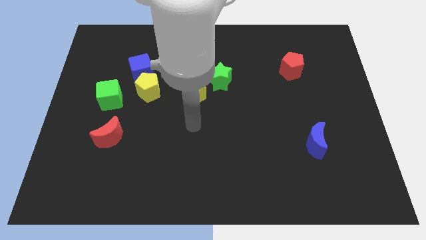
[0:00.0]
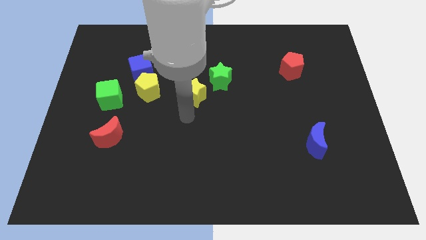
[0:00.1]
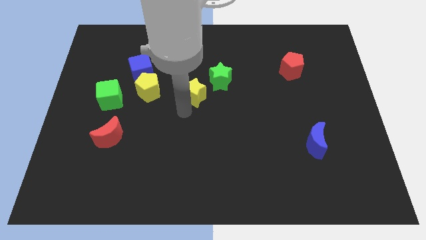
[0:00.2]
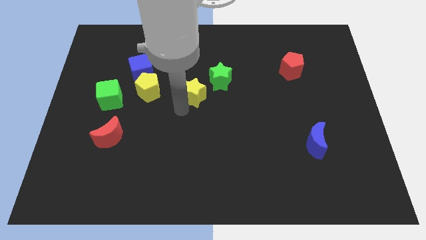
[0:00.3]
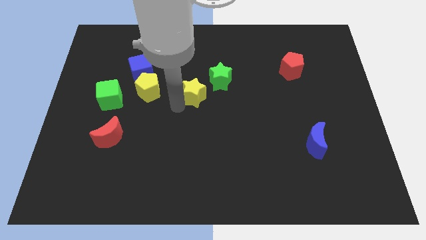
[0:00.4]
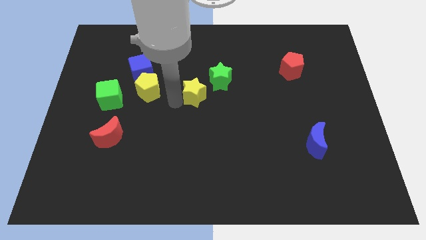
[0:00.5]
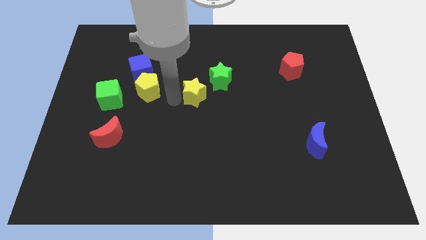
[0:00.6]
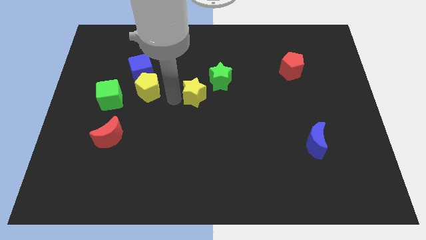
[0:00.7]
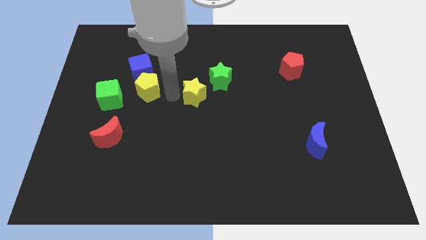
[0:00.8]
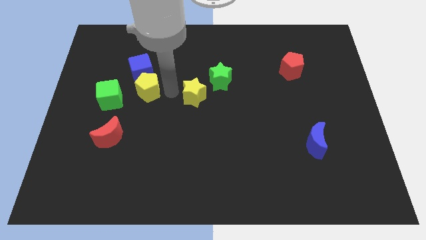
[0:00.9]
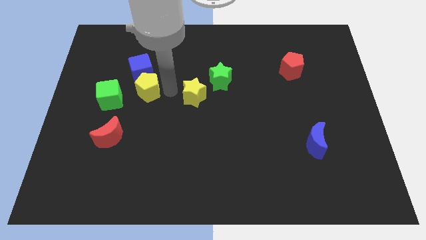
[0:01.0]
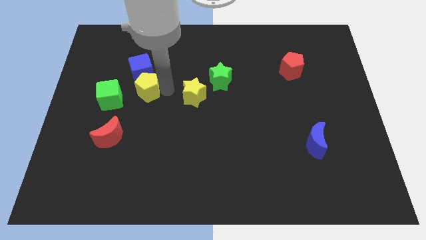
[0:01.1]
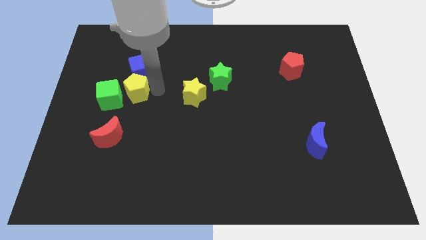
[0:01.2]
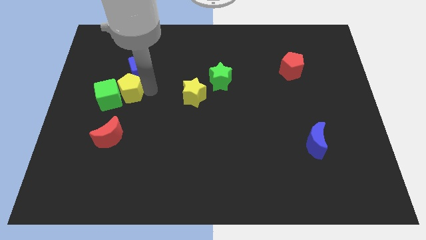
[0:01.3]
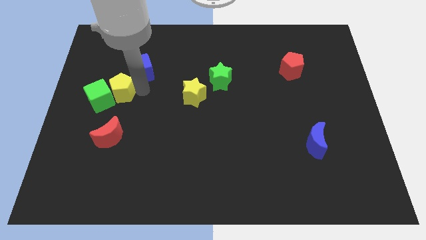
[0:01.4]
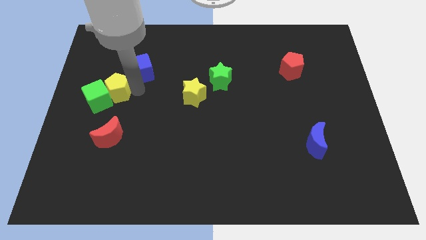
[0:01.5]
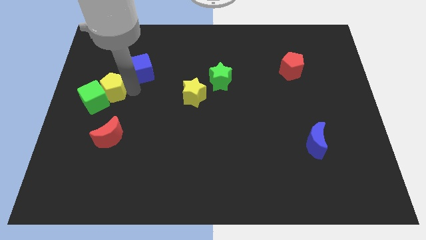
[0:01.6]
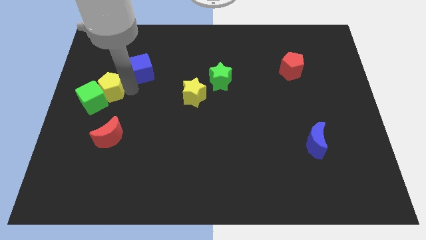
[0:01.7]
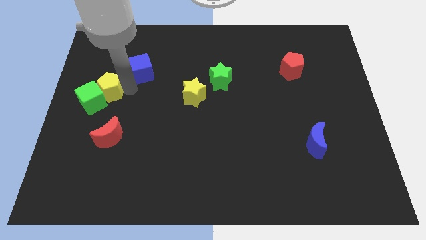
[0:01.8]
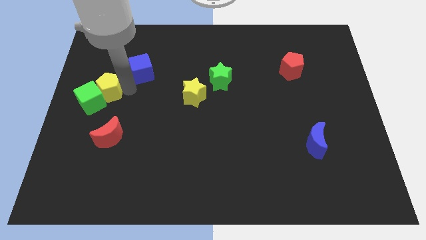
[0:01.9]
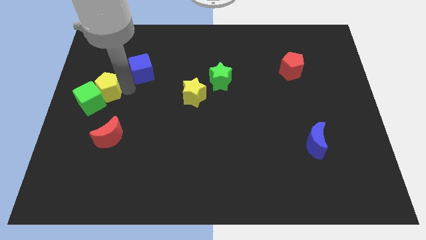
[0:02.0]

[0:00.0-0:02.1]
push yellow pentagon into green cube

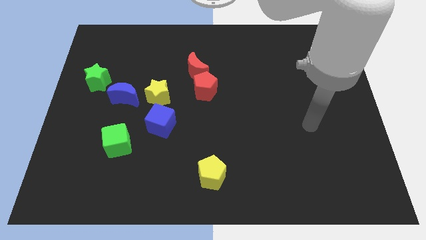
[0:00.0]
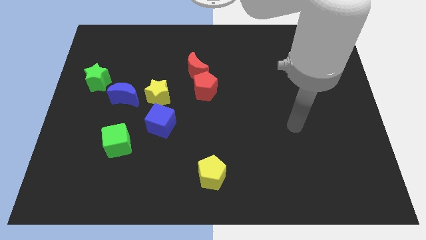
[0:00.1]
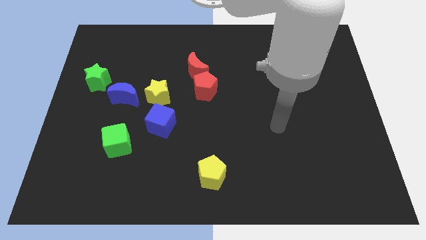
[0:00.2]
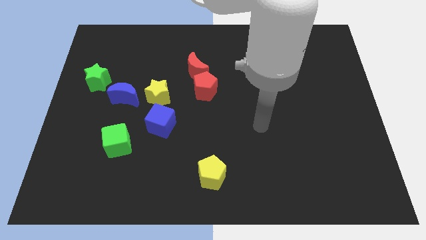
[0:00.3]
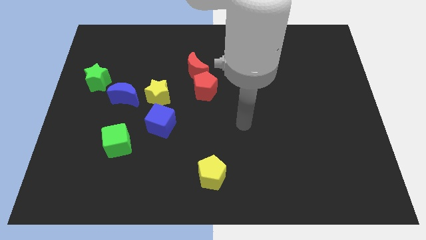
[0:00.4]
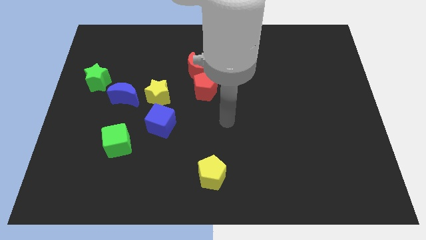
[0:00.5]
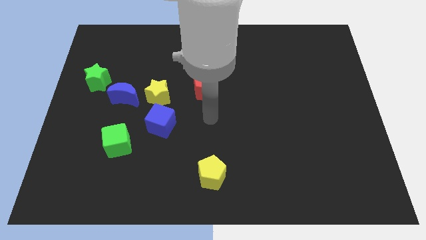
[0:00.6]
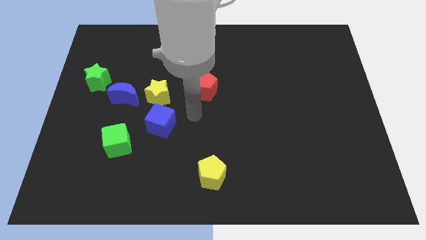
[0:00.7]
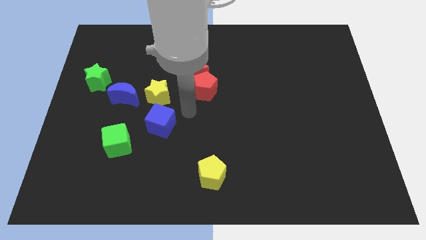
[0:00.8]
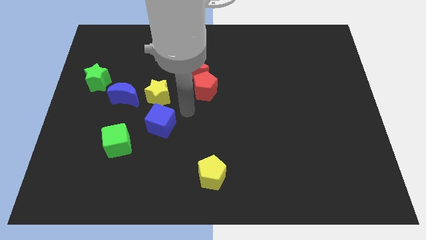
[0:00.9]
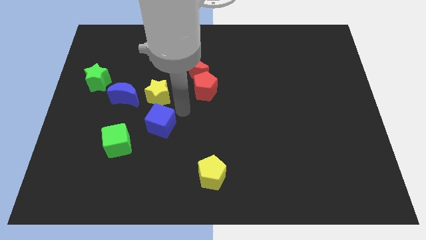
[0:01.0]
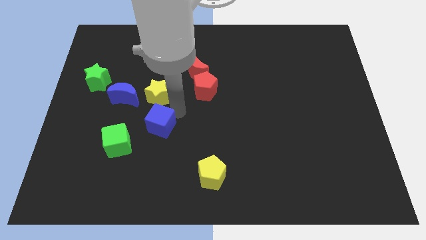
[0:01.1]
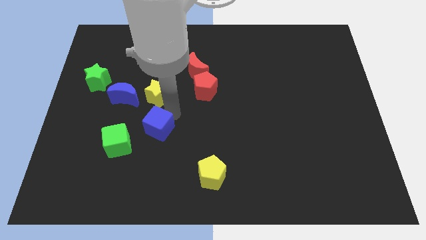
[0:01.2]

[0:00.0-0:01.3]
move your arm to the top side of the blue cube

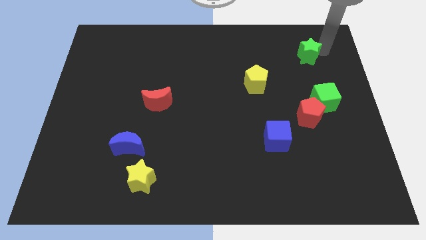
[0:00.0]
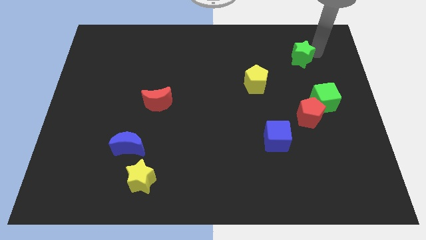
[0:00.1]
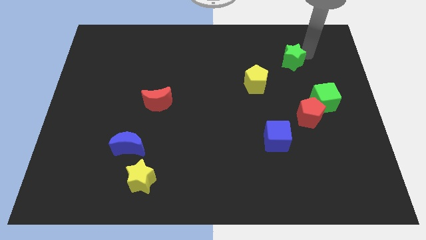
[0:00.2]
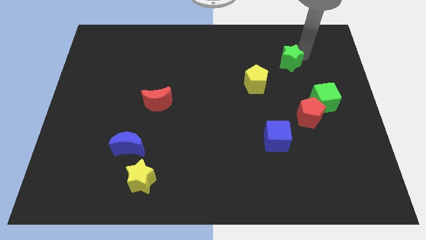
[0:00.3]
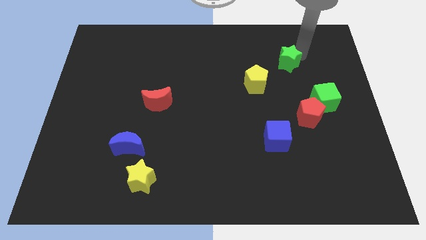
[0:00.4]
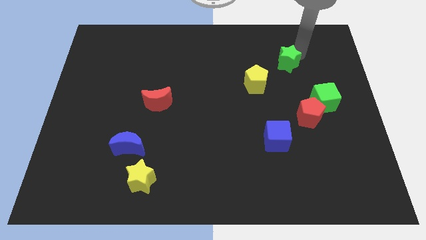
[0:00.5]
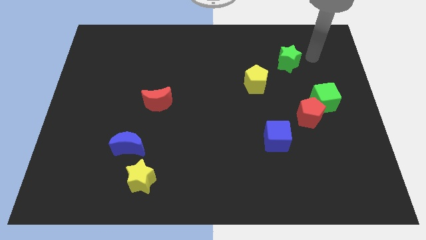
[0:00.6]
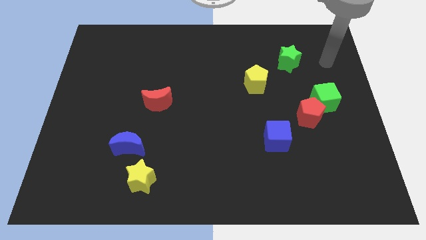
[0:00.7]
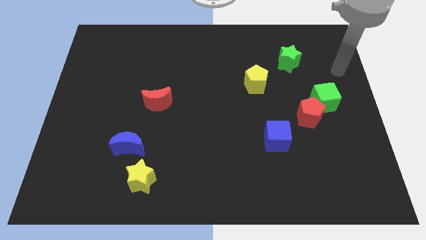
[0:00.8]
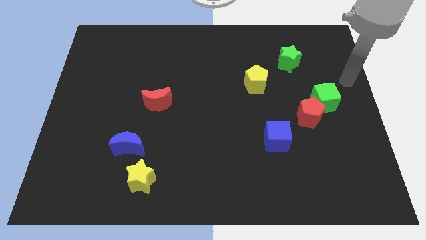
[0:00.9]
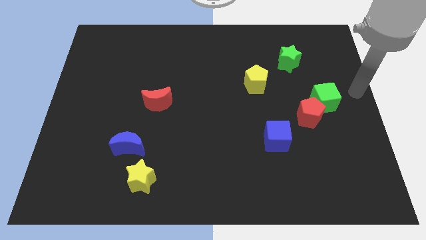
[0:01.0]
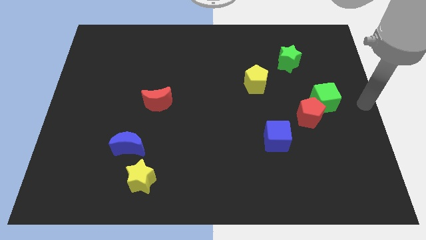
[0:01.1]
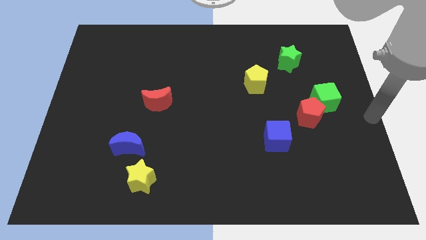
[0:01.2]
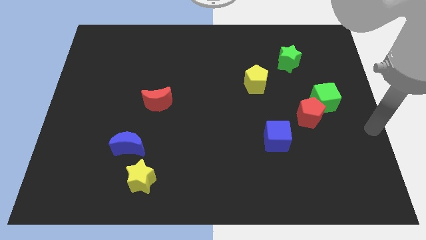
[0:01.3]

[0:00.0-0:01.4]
push the green star diagonally top right to yellow pentagon

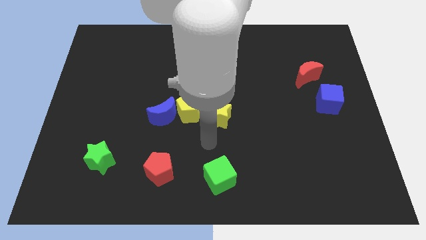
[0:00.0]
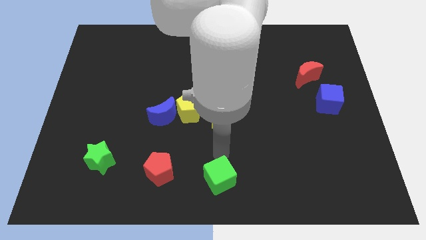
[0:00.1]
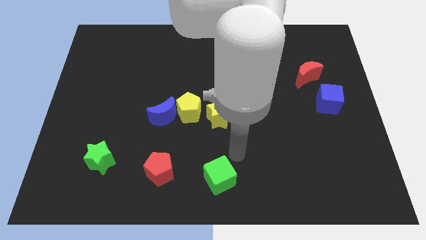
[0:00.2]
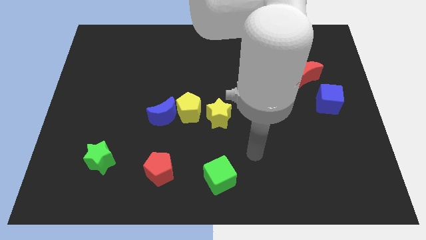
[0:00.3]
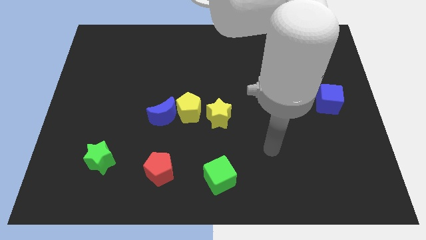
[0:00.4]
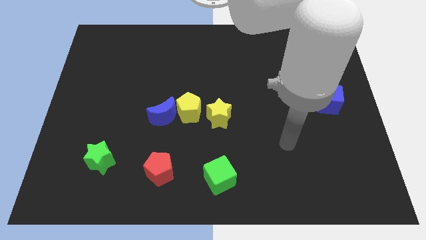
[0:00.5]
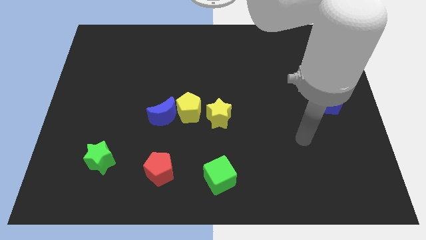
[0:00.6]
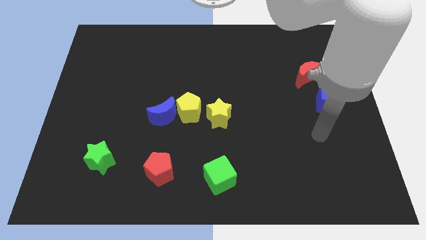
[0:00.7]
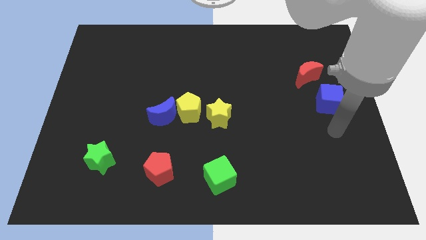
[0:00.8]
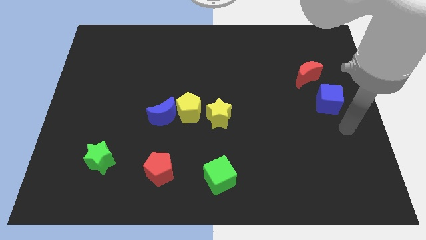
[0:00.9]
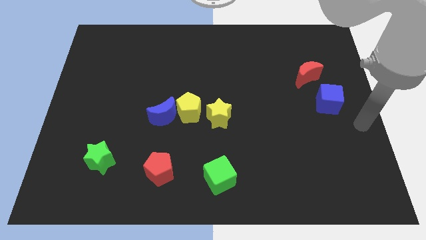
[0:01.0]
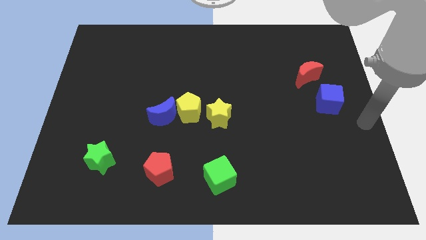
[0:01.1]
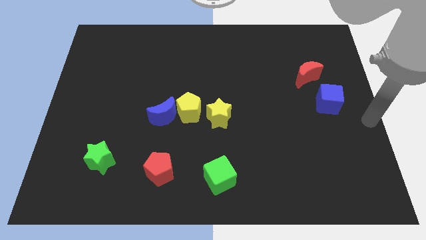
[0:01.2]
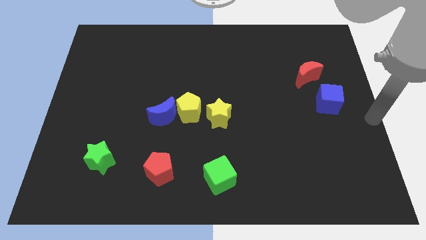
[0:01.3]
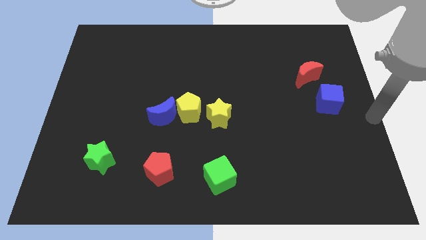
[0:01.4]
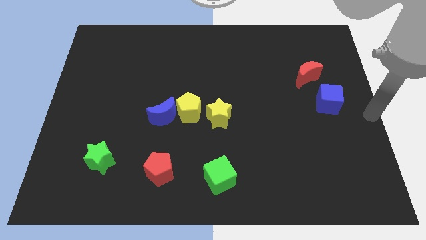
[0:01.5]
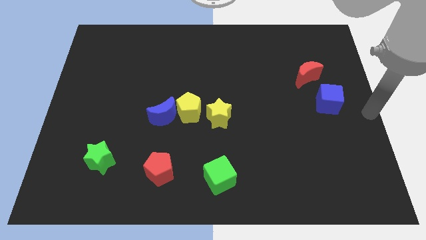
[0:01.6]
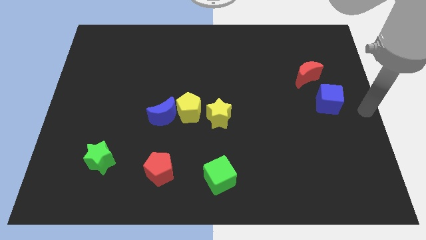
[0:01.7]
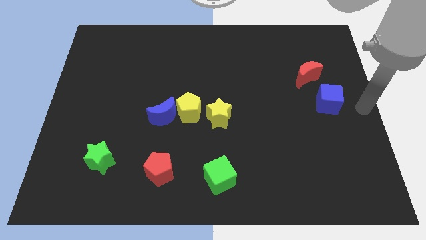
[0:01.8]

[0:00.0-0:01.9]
point your arm to the right of the blue cube

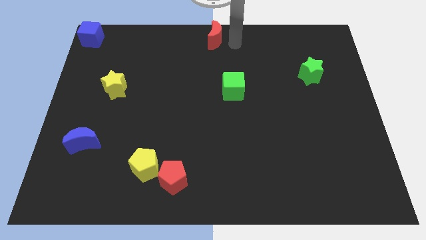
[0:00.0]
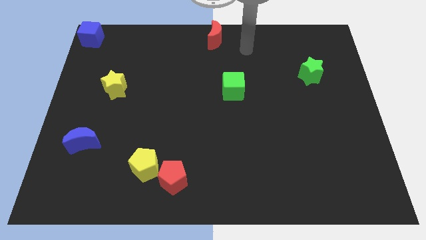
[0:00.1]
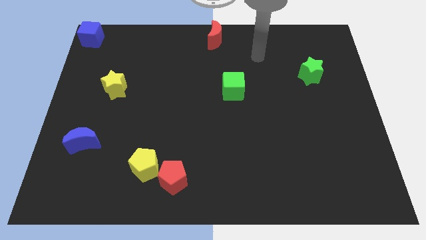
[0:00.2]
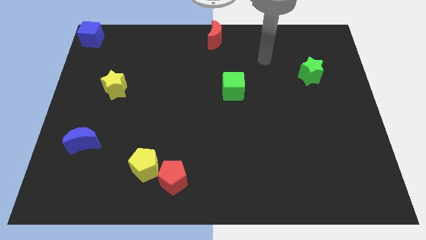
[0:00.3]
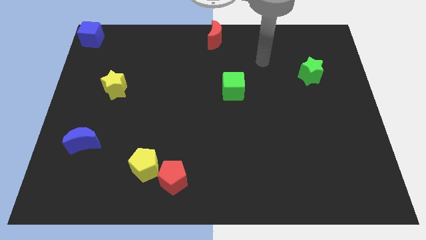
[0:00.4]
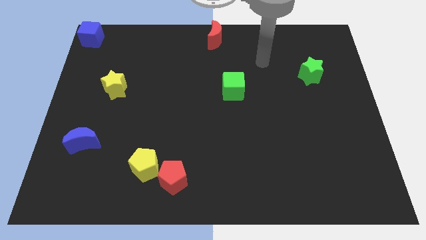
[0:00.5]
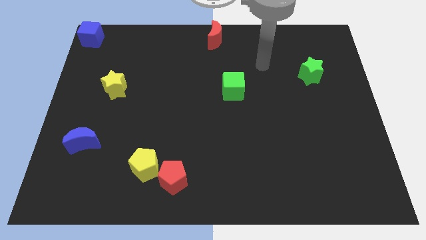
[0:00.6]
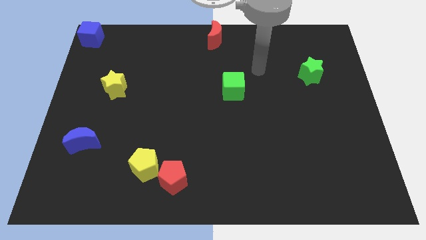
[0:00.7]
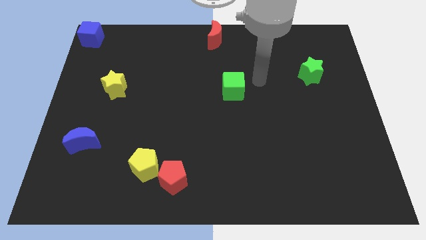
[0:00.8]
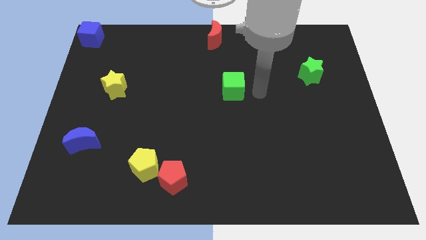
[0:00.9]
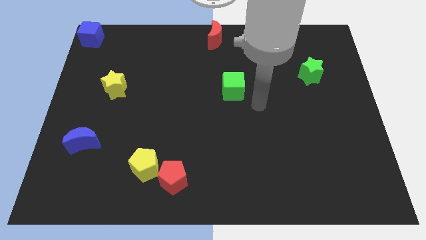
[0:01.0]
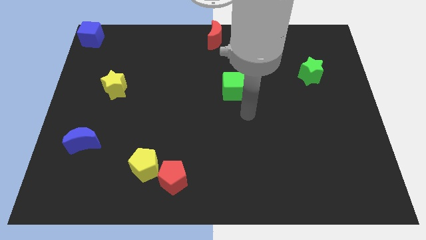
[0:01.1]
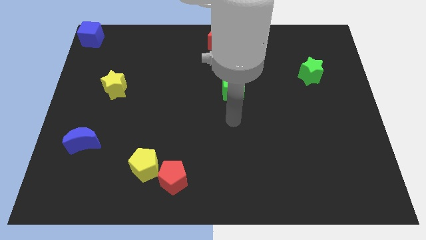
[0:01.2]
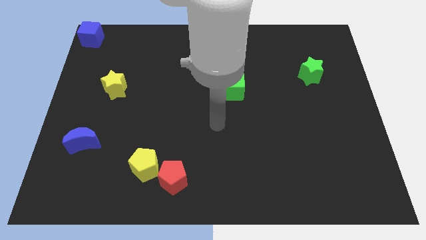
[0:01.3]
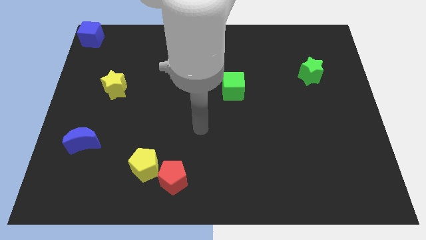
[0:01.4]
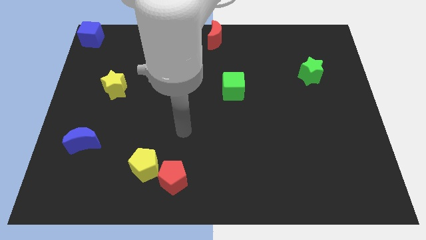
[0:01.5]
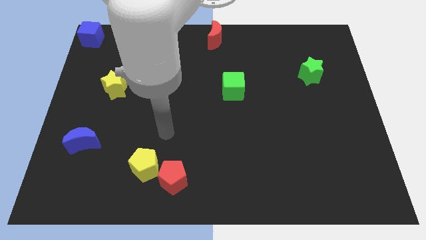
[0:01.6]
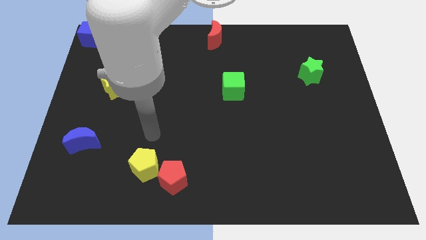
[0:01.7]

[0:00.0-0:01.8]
move your arm towards the left side of the board

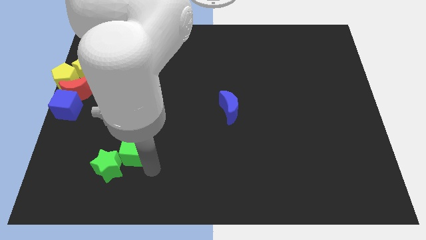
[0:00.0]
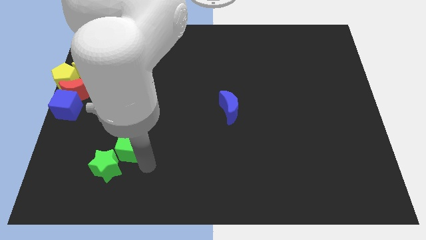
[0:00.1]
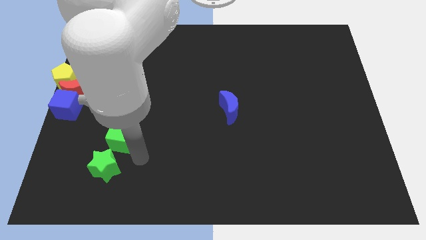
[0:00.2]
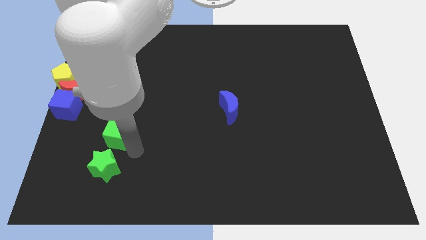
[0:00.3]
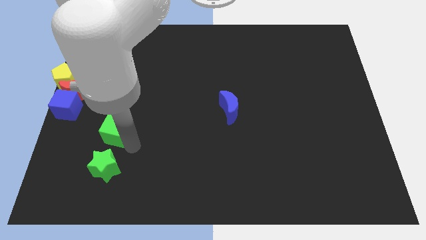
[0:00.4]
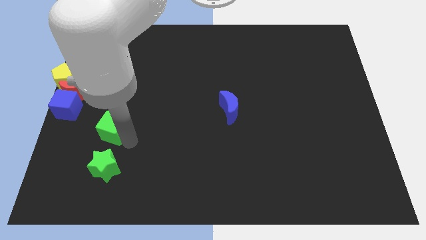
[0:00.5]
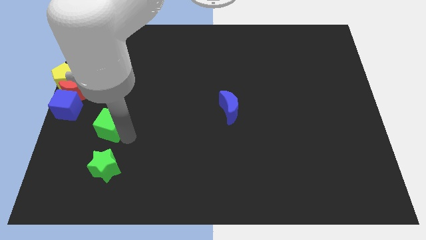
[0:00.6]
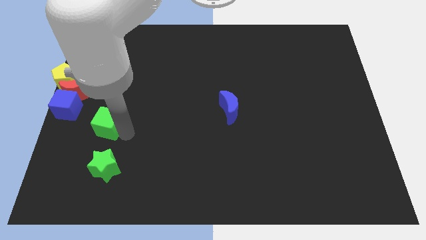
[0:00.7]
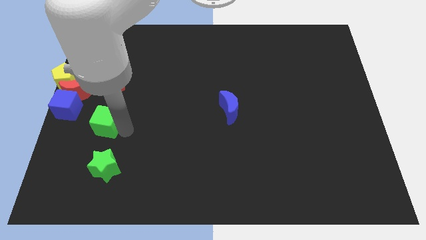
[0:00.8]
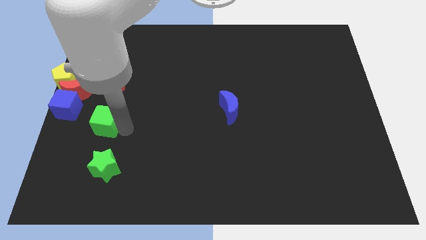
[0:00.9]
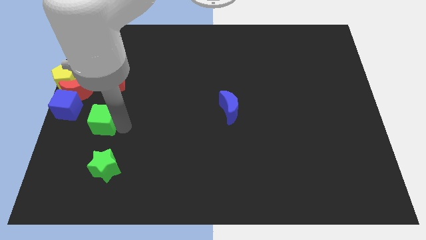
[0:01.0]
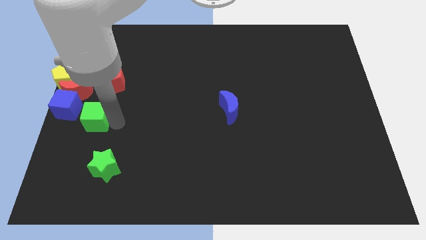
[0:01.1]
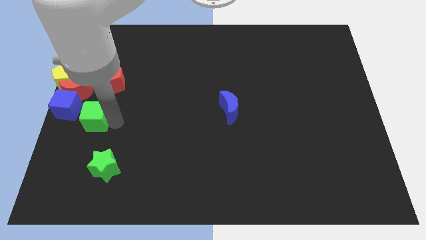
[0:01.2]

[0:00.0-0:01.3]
separate the green cube from the green star